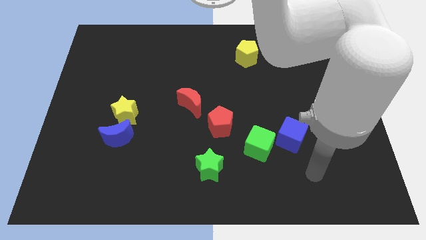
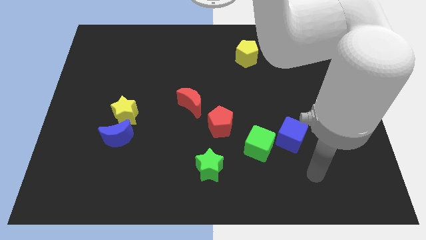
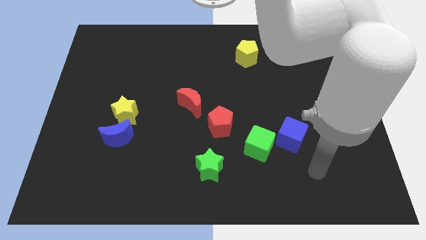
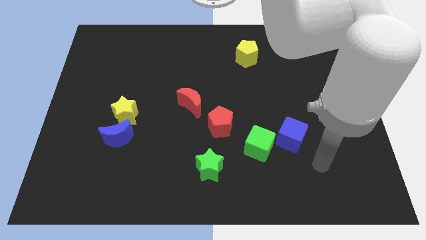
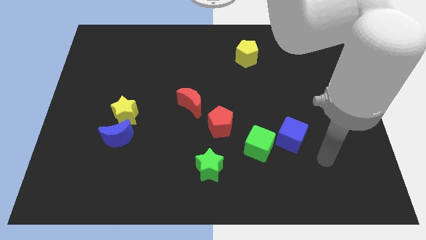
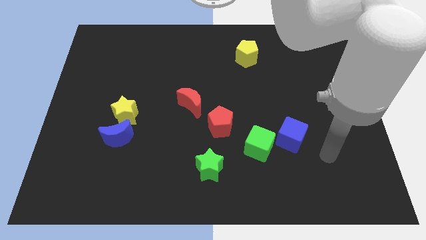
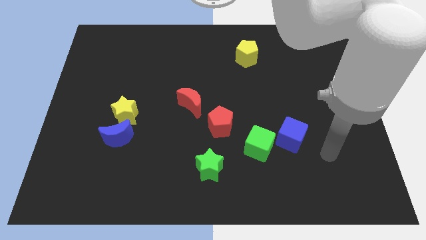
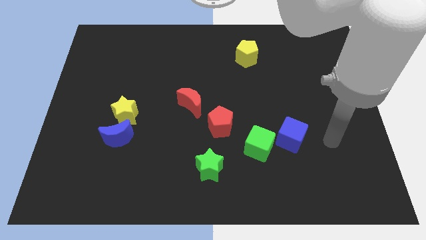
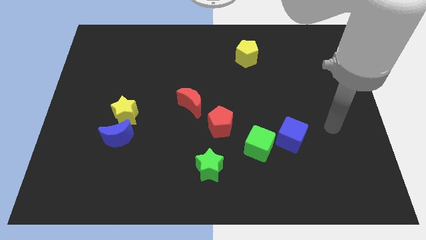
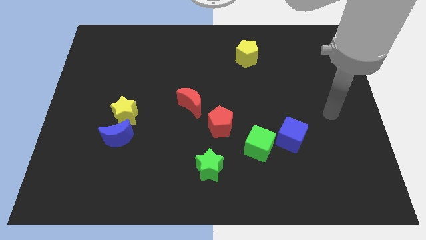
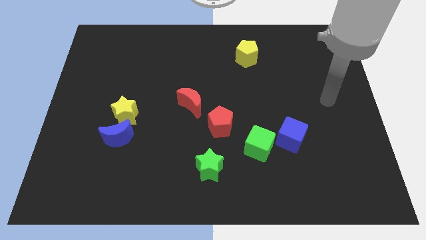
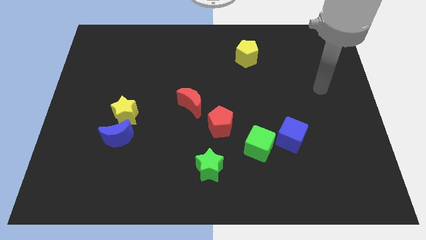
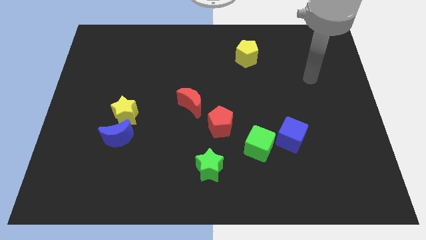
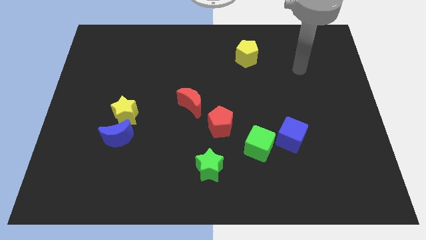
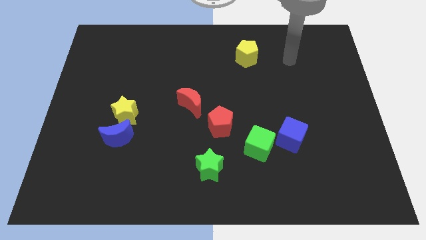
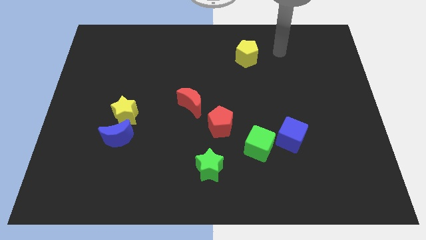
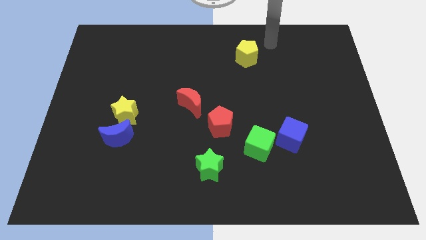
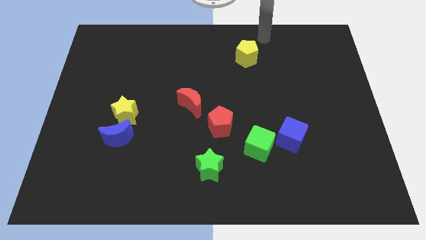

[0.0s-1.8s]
move your arm near to the yellow pentagon

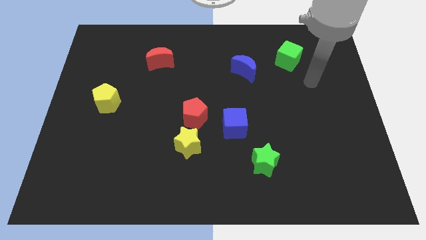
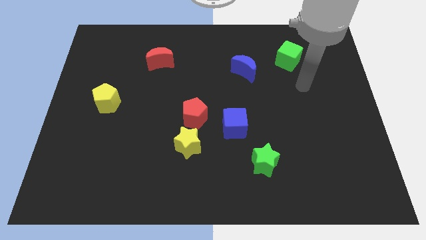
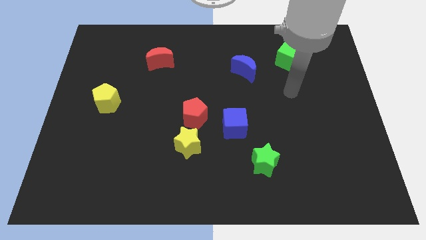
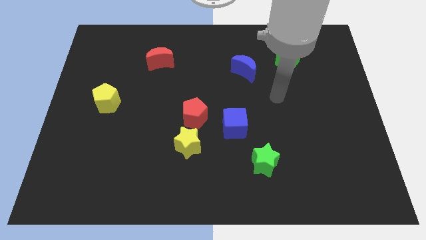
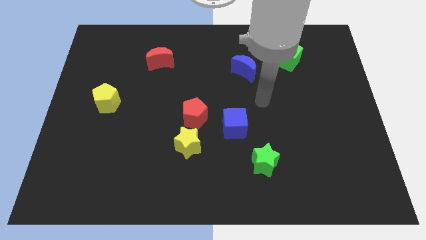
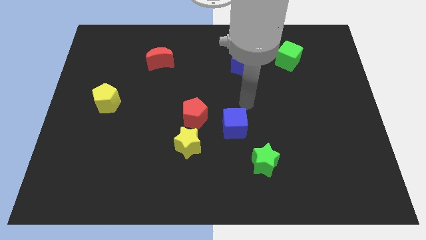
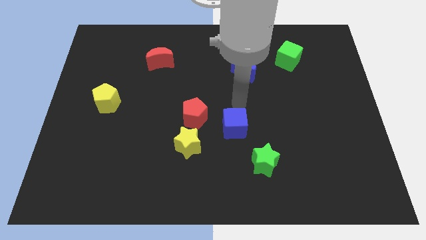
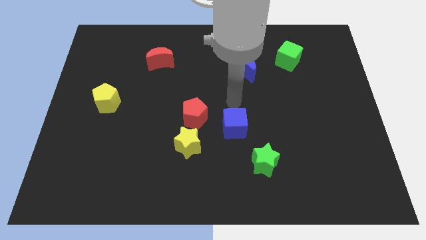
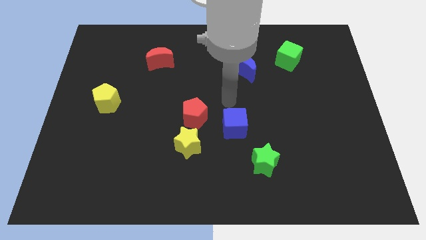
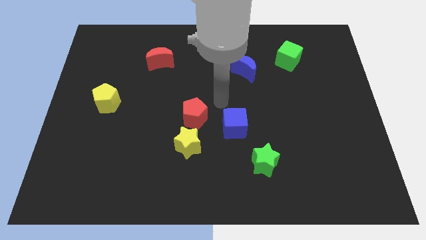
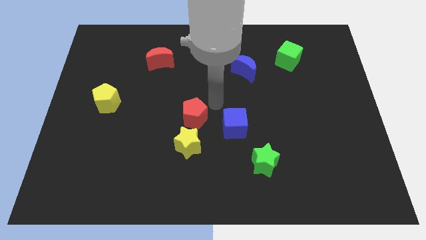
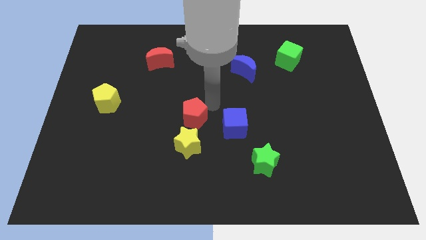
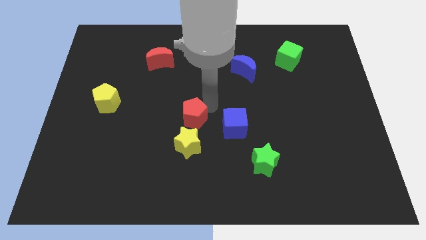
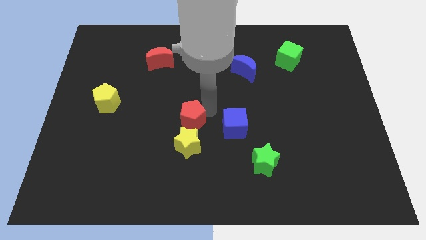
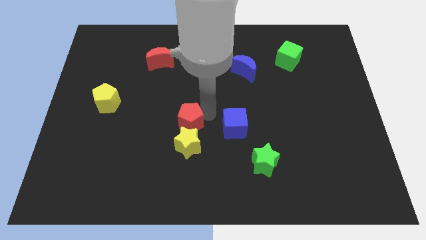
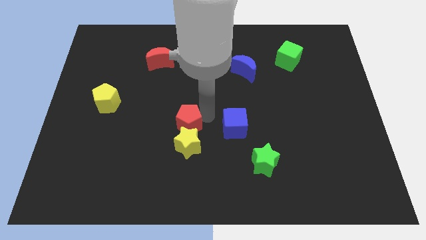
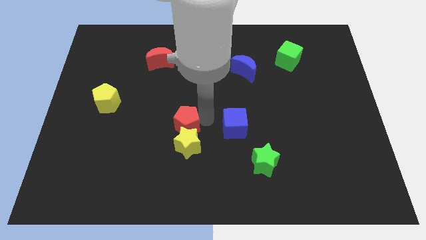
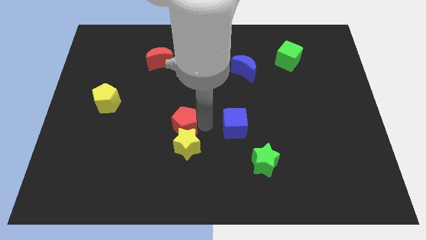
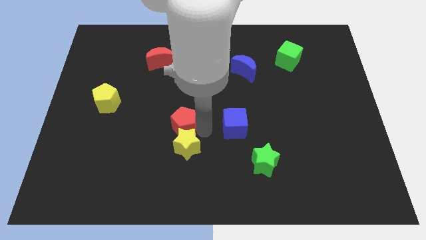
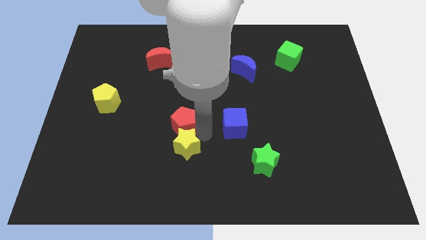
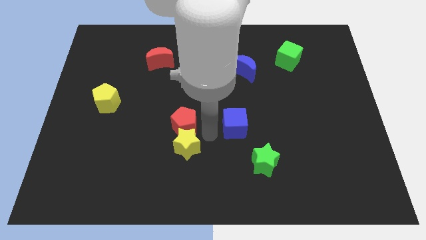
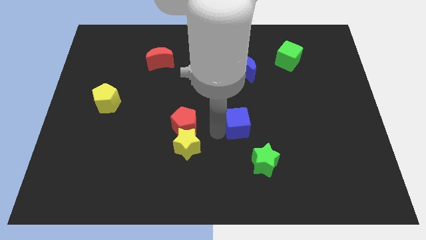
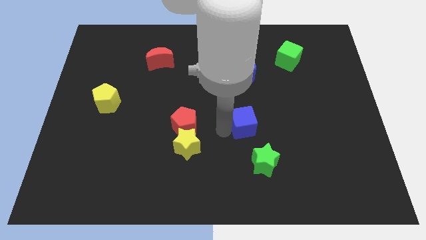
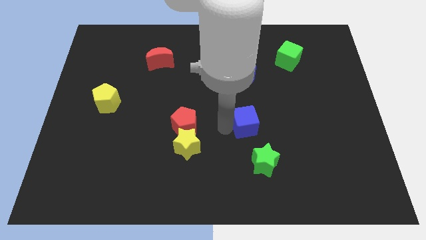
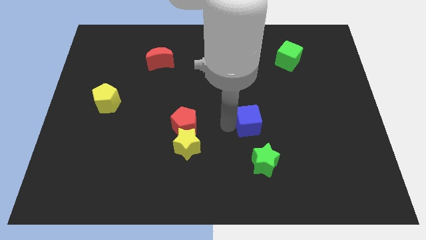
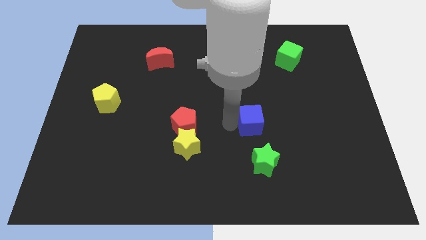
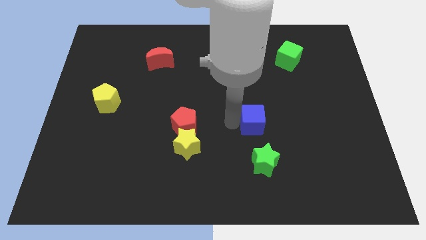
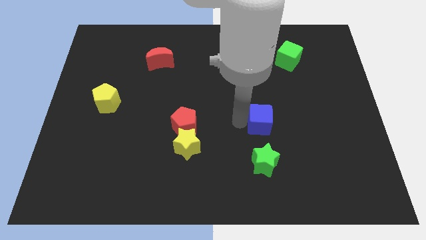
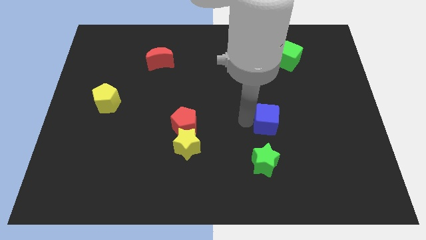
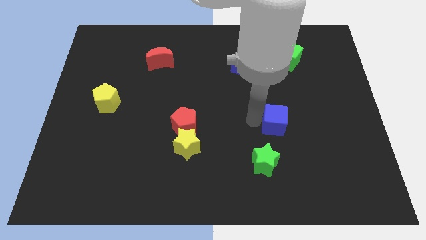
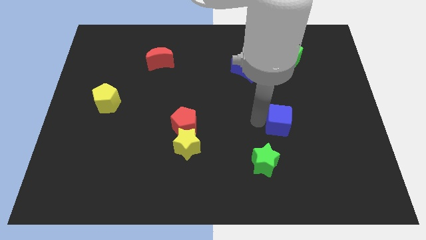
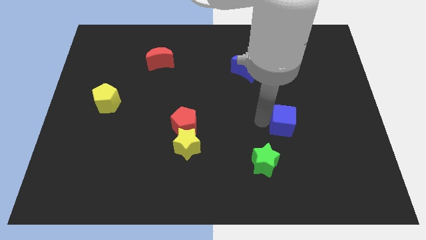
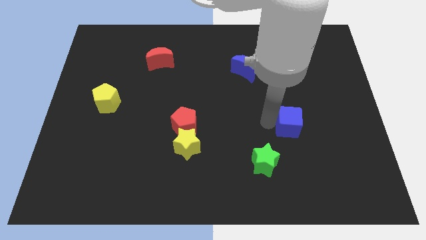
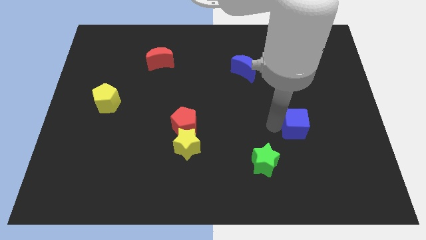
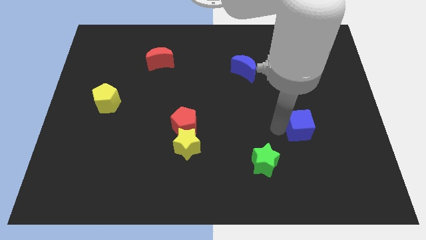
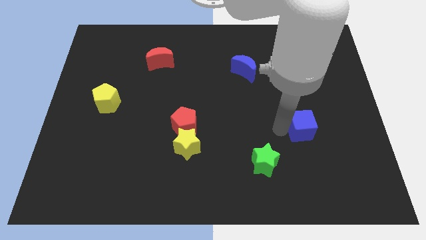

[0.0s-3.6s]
push the red pentagon and blue cube in opposite directions

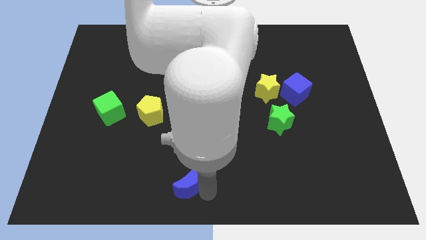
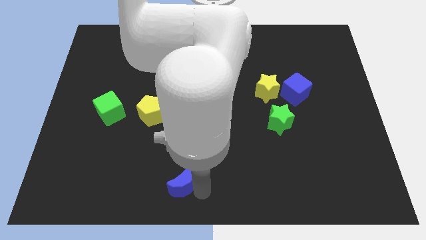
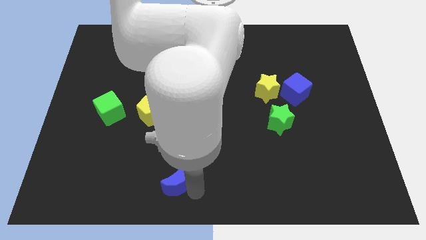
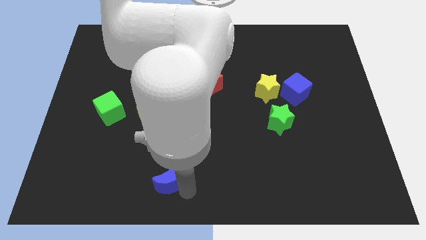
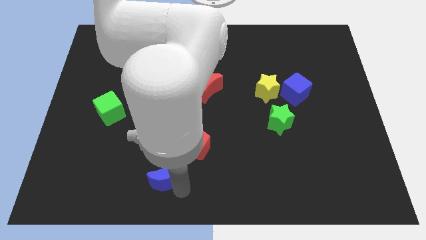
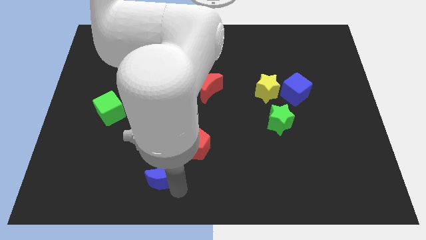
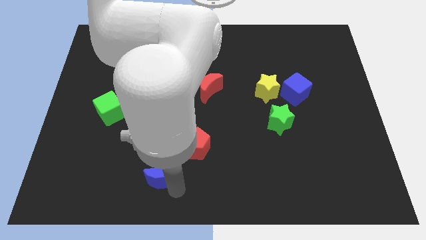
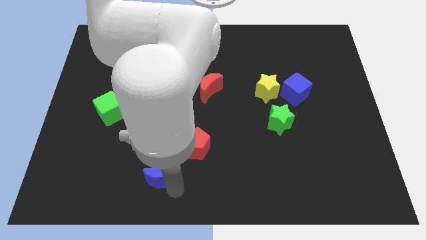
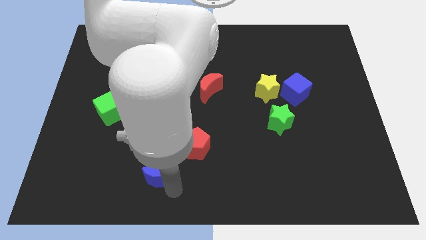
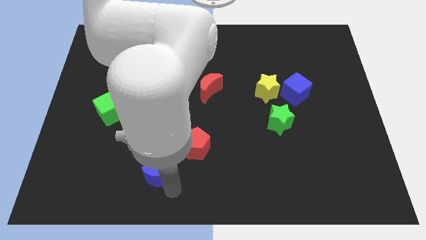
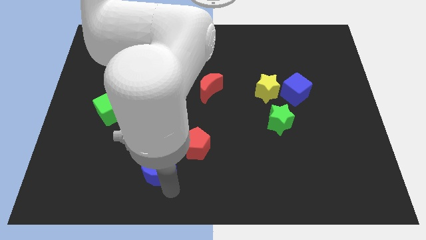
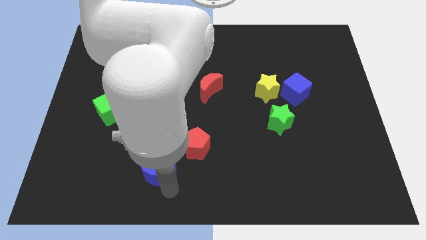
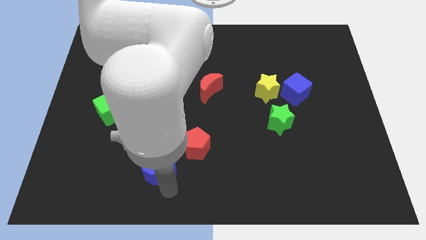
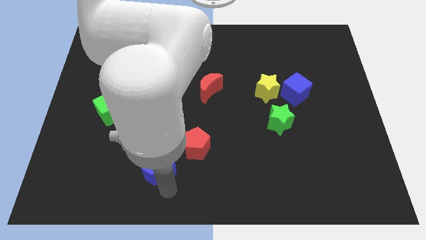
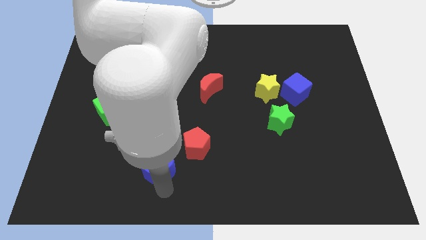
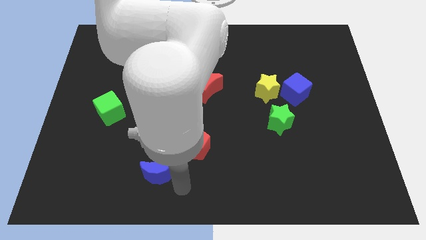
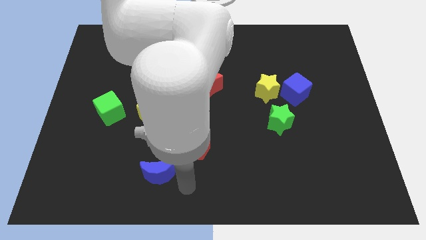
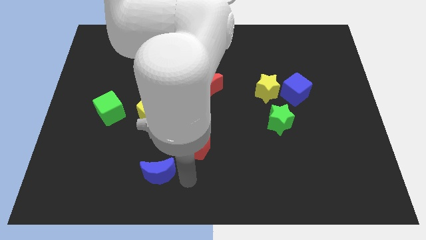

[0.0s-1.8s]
push the blue crescent to the bottom of the yellow pentagon

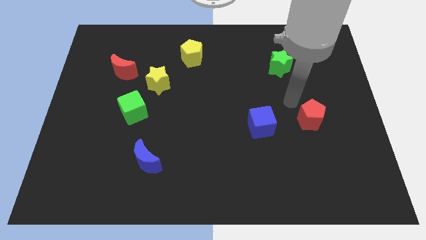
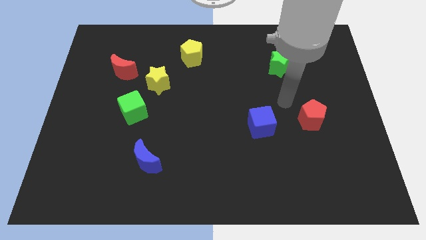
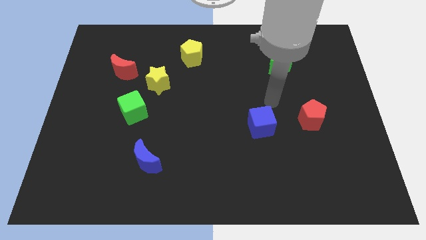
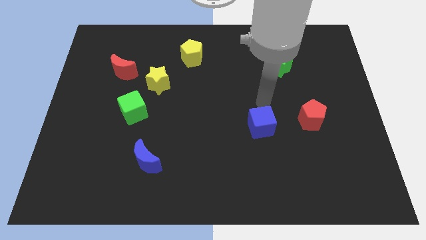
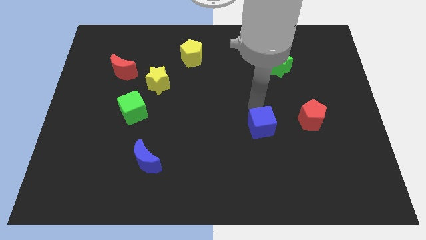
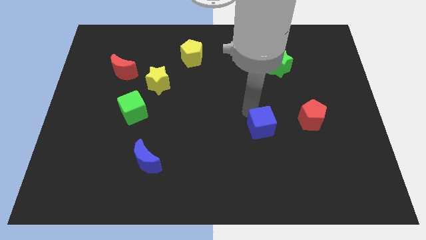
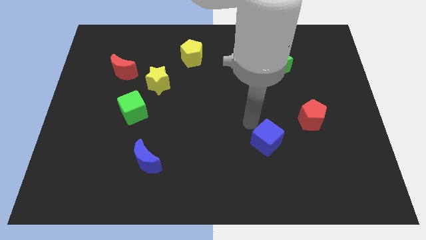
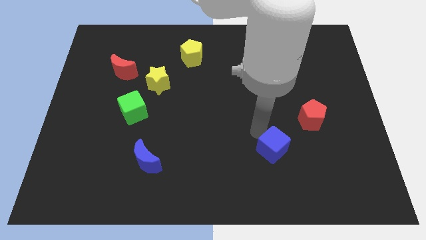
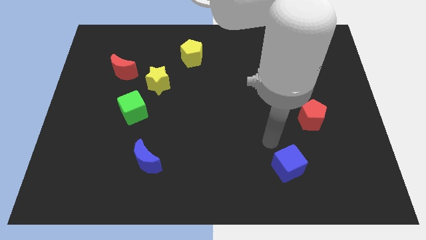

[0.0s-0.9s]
push the blue cube downwards

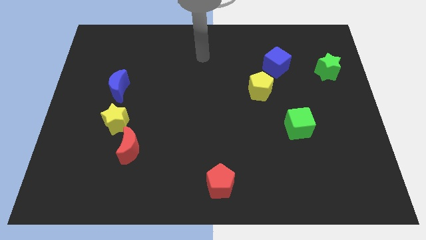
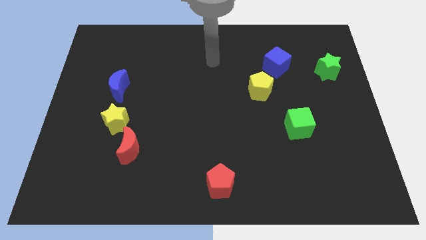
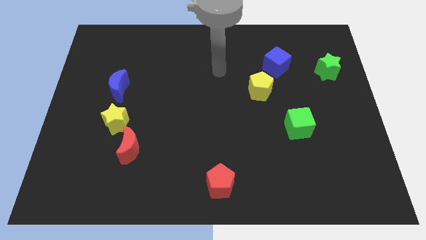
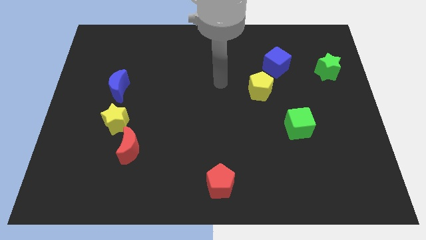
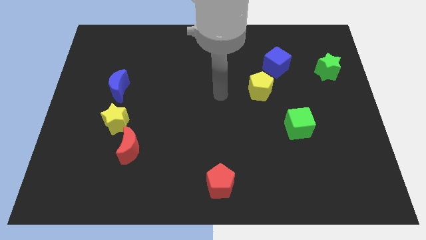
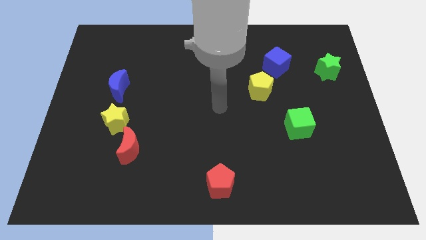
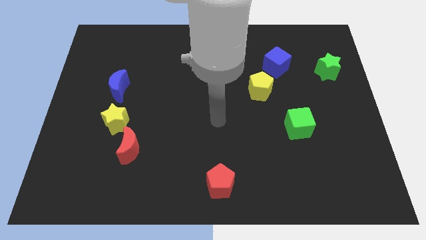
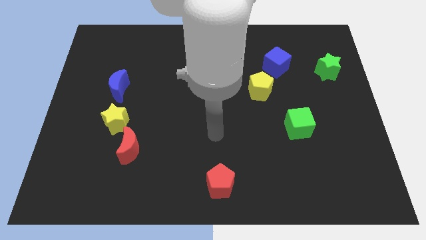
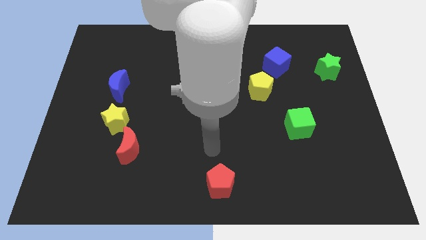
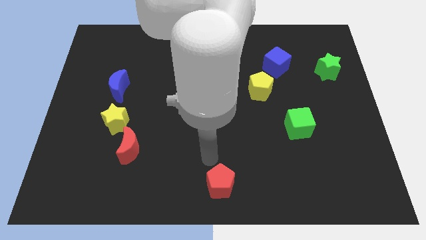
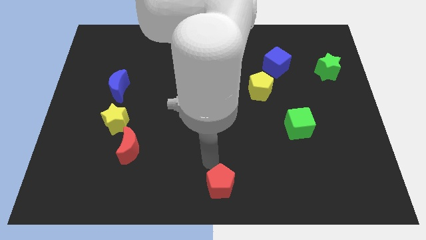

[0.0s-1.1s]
move your arm to the top side of the red pentagon
